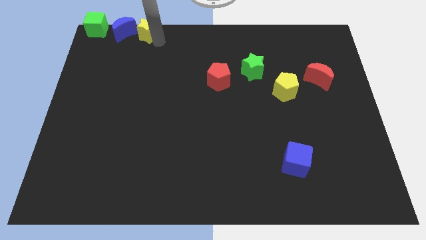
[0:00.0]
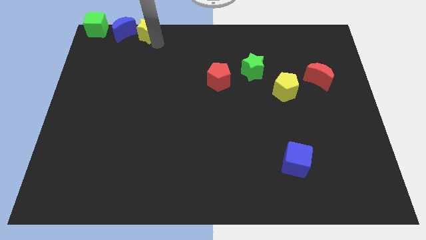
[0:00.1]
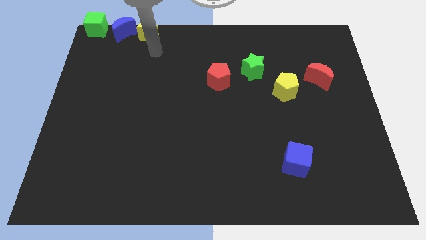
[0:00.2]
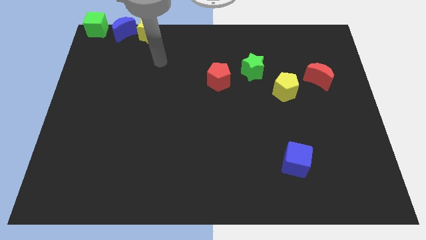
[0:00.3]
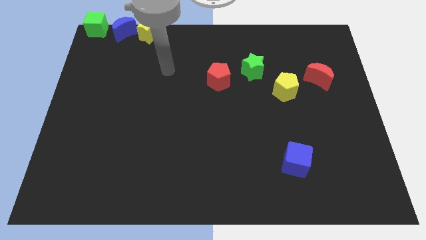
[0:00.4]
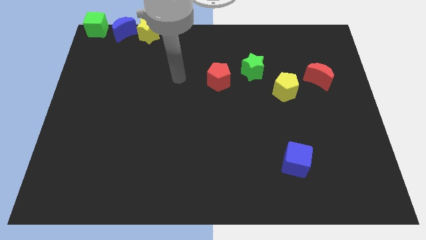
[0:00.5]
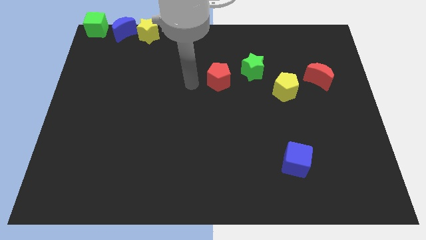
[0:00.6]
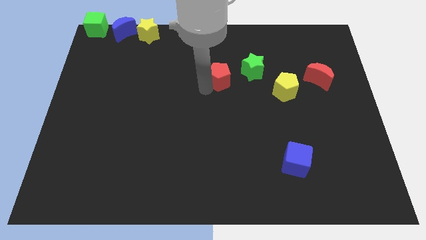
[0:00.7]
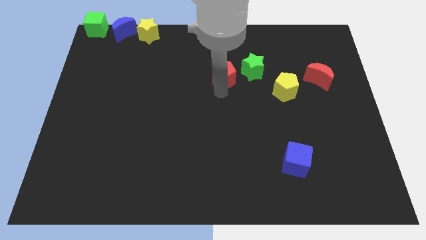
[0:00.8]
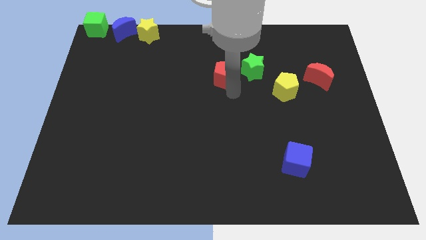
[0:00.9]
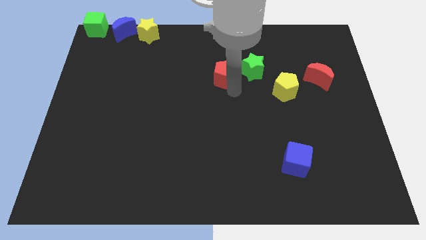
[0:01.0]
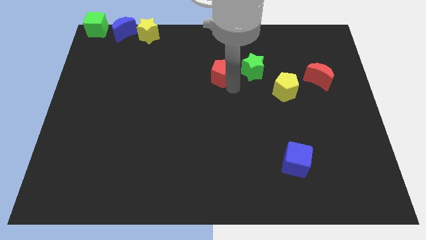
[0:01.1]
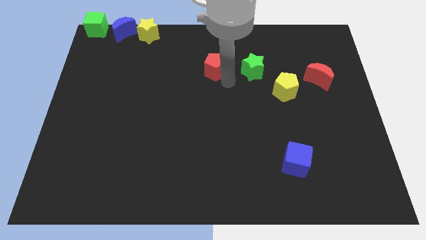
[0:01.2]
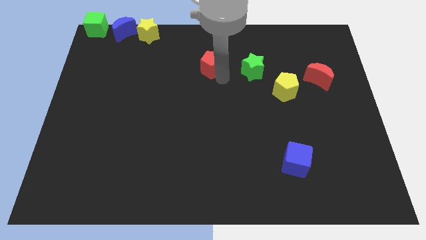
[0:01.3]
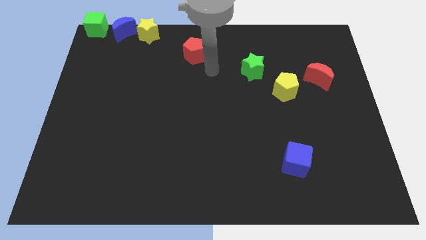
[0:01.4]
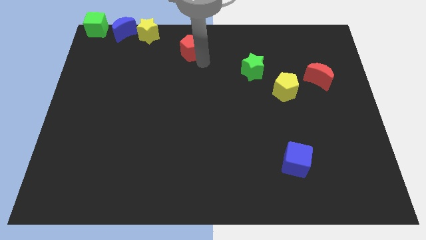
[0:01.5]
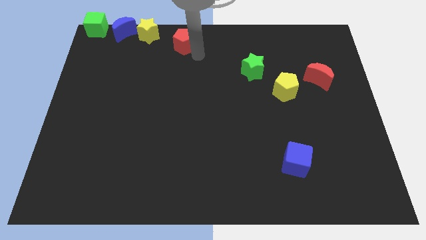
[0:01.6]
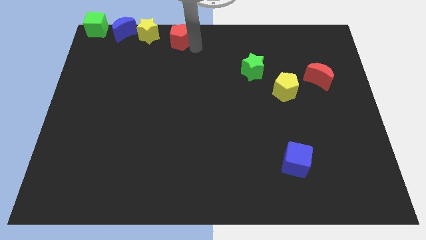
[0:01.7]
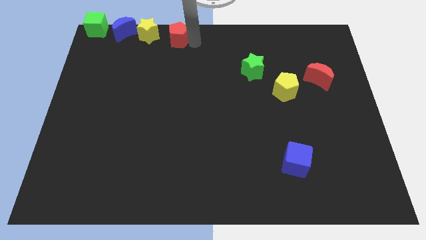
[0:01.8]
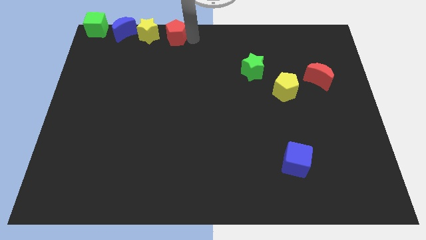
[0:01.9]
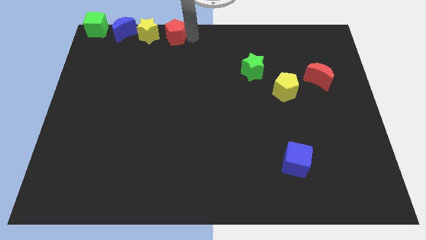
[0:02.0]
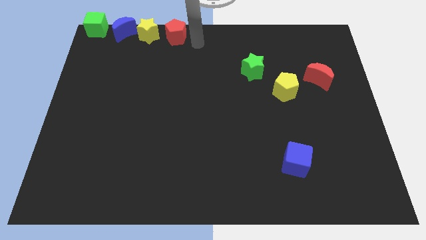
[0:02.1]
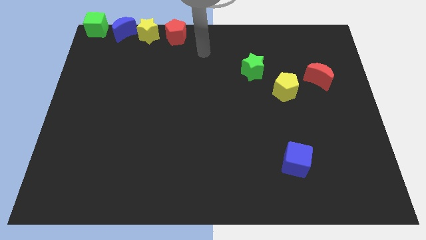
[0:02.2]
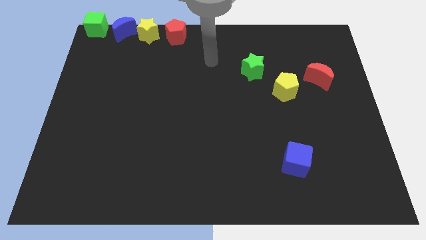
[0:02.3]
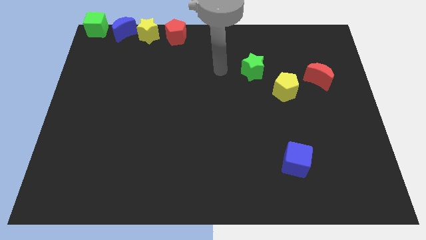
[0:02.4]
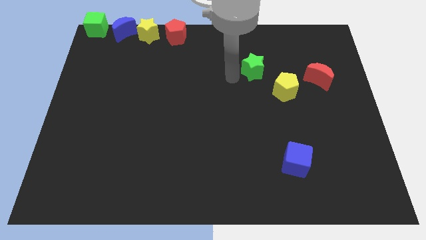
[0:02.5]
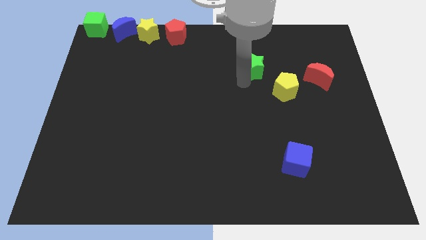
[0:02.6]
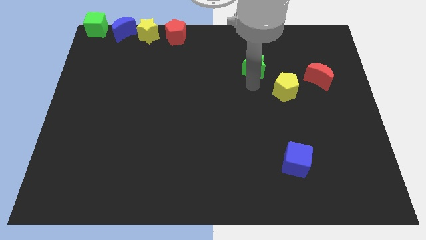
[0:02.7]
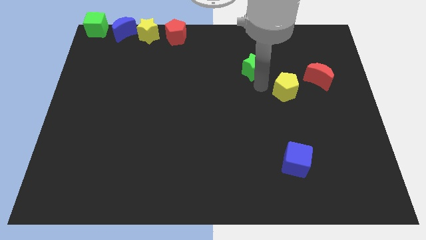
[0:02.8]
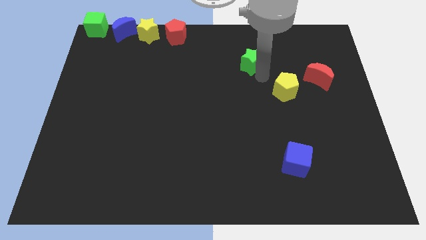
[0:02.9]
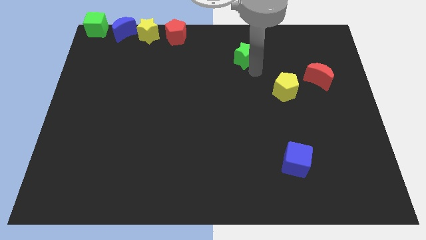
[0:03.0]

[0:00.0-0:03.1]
push the red pentagon to the right side of the yellow star

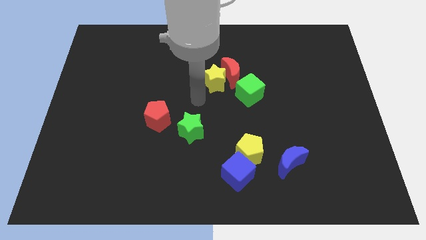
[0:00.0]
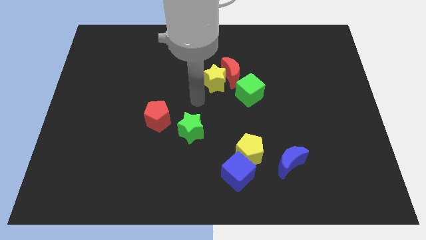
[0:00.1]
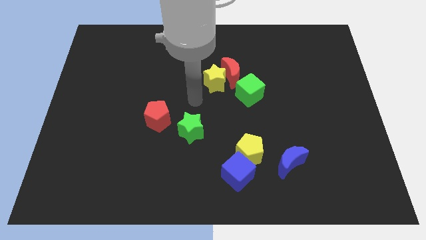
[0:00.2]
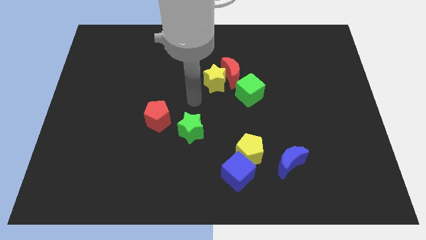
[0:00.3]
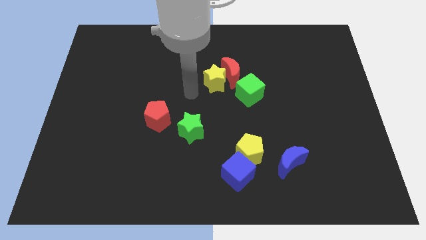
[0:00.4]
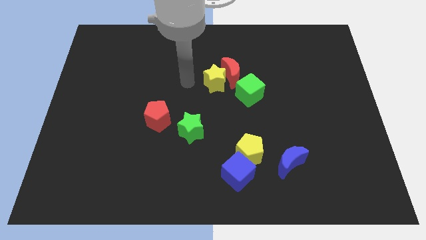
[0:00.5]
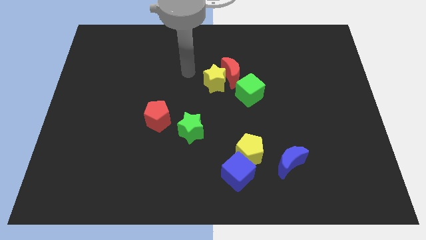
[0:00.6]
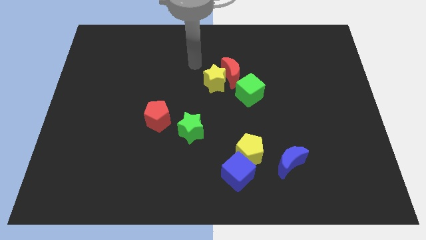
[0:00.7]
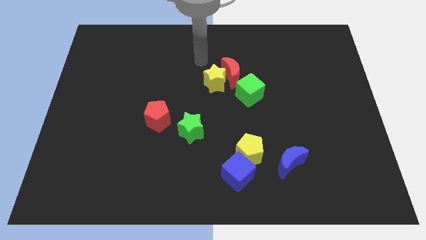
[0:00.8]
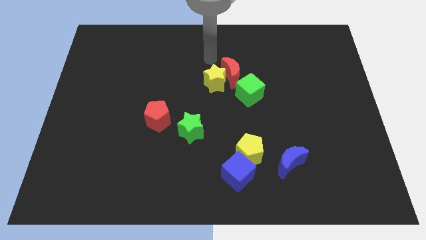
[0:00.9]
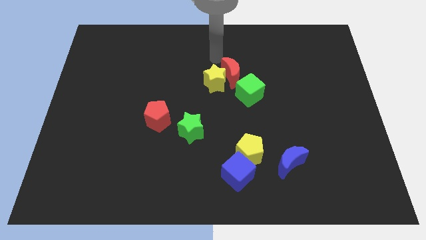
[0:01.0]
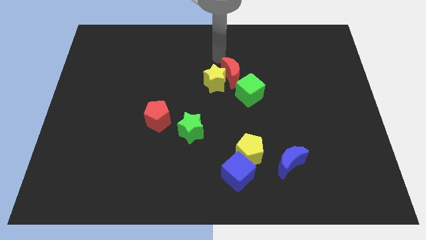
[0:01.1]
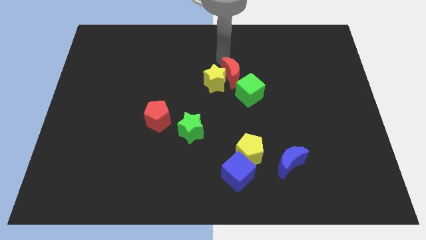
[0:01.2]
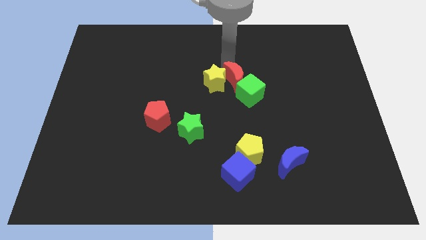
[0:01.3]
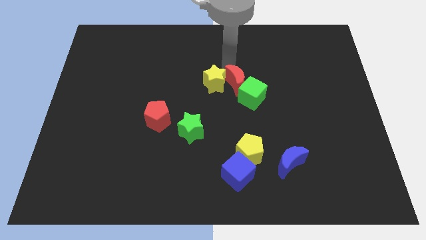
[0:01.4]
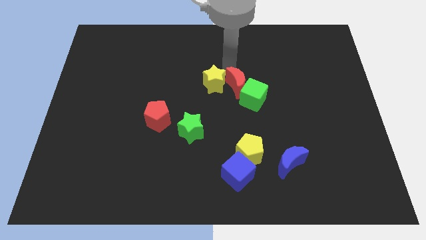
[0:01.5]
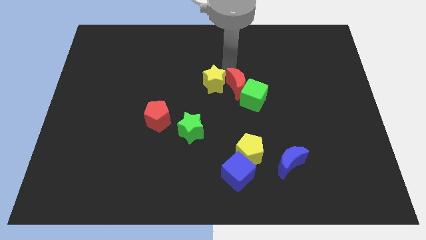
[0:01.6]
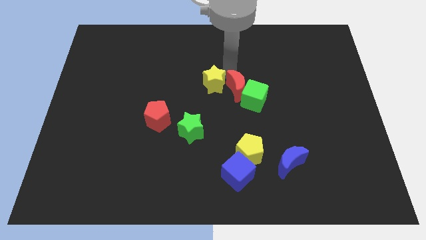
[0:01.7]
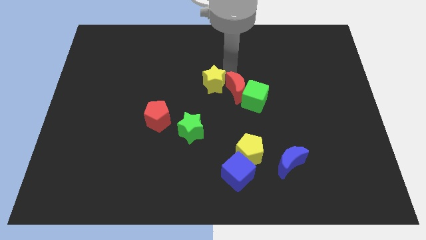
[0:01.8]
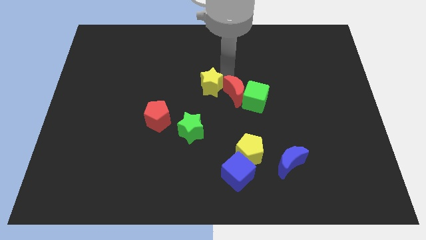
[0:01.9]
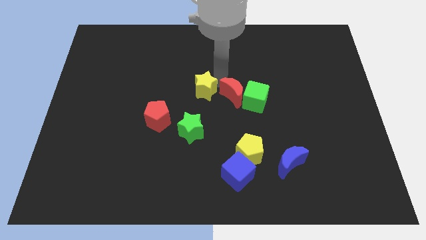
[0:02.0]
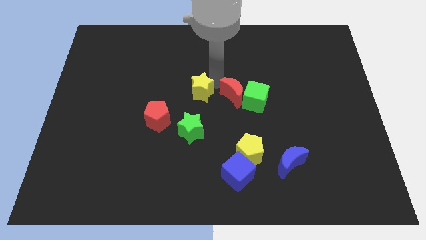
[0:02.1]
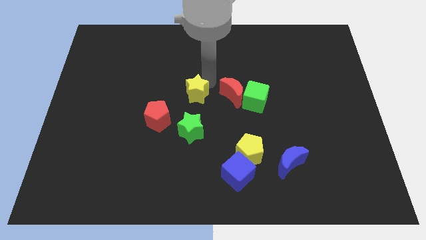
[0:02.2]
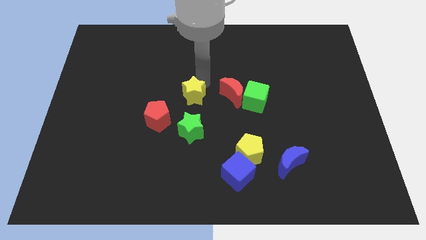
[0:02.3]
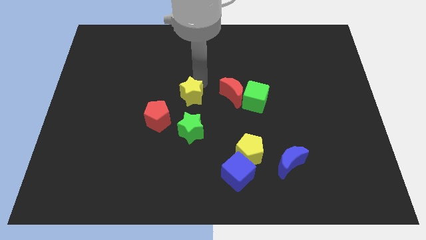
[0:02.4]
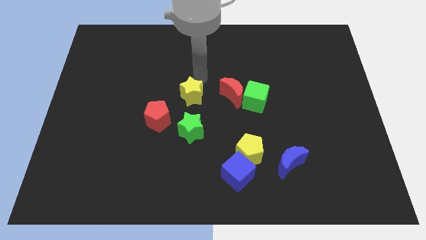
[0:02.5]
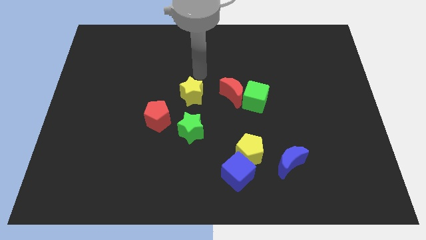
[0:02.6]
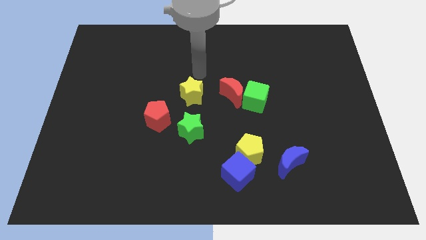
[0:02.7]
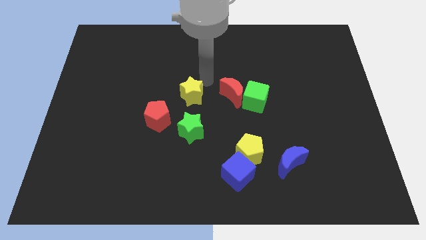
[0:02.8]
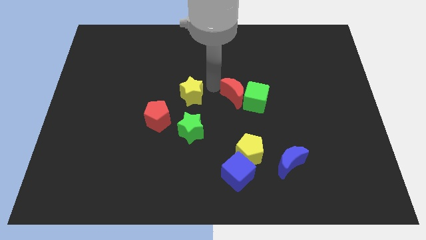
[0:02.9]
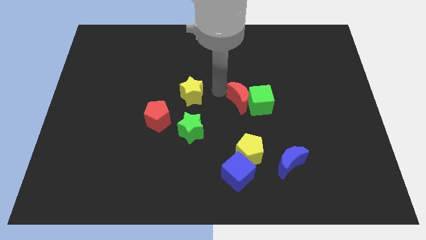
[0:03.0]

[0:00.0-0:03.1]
separate yellow star from the red moon

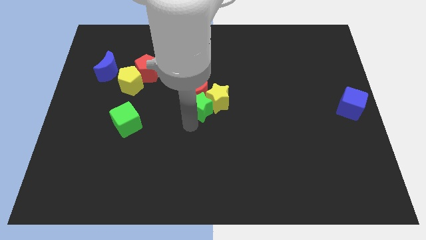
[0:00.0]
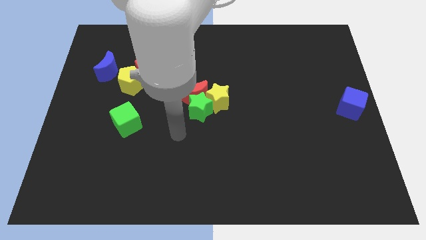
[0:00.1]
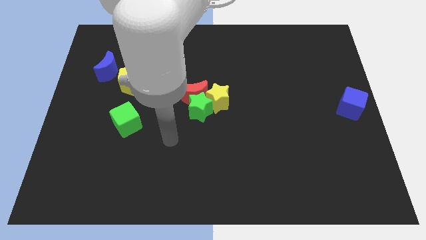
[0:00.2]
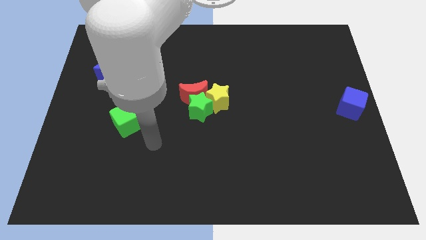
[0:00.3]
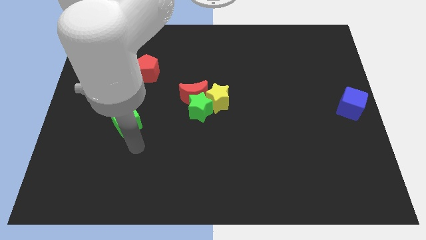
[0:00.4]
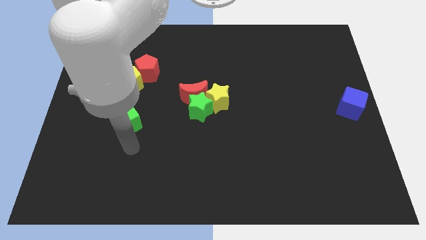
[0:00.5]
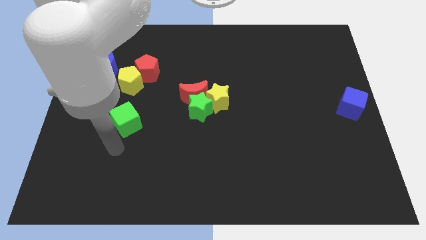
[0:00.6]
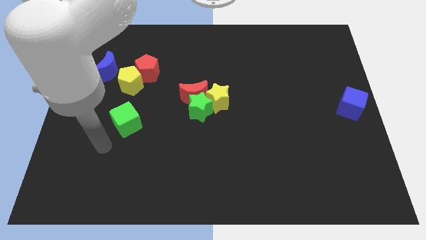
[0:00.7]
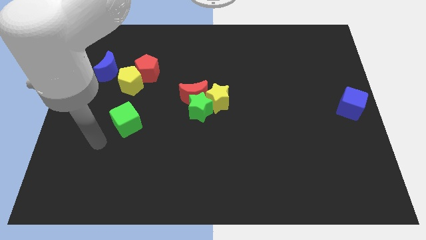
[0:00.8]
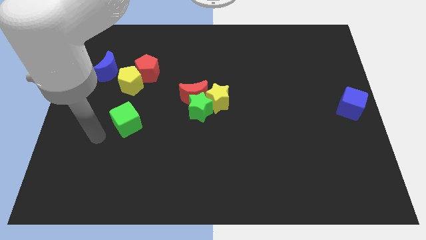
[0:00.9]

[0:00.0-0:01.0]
move your arm away from the green star

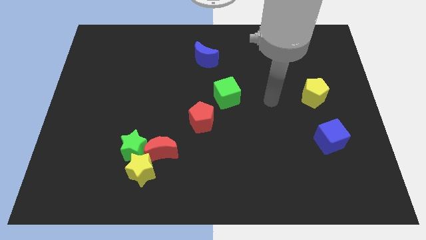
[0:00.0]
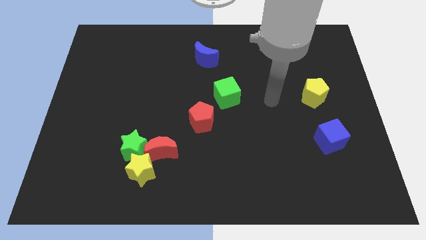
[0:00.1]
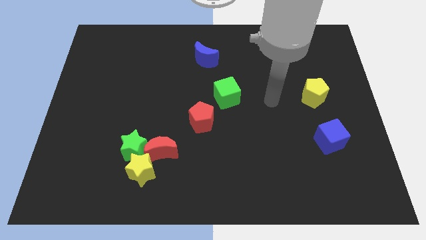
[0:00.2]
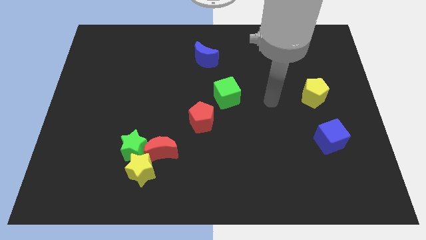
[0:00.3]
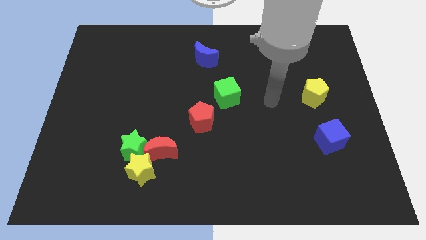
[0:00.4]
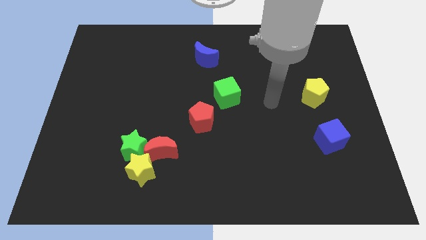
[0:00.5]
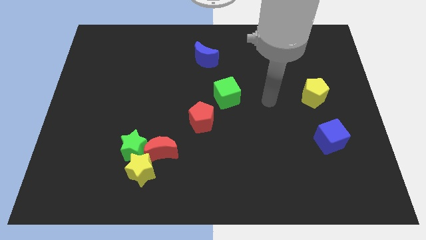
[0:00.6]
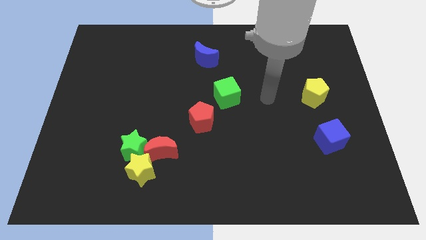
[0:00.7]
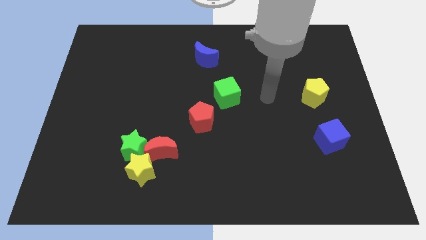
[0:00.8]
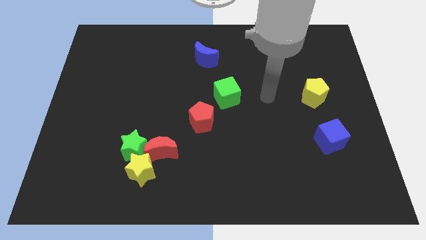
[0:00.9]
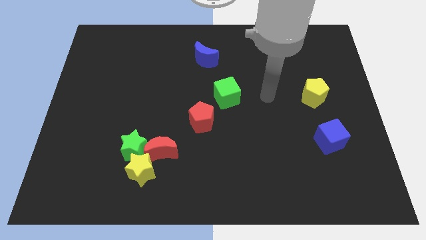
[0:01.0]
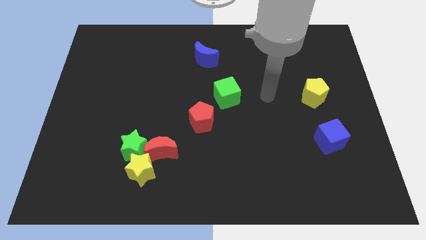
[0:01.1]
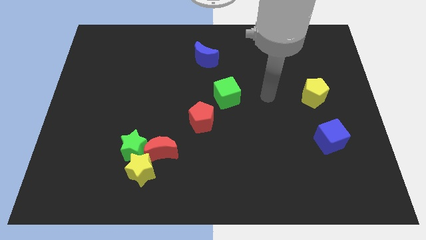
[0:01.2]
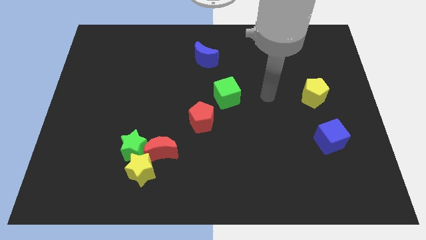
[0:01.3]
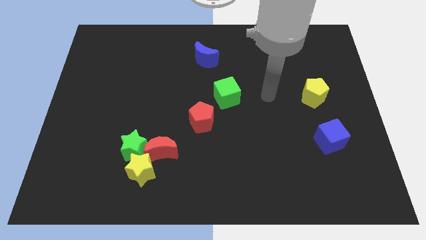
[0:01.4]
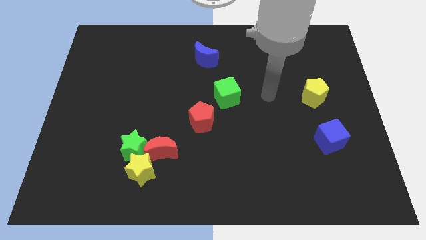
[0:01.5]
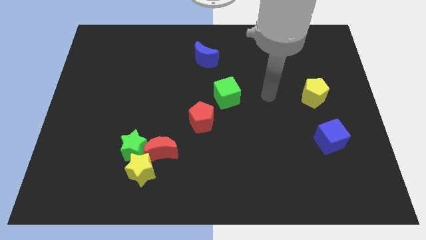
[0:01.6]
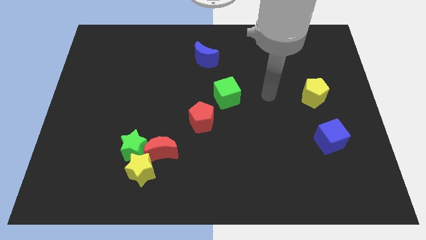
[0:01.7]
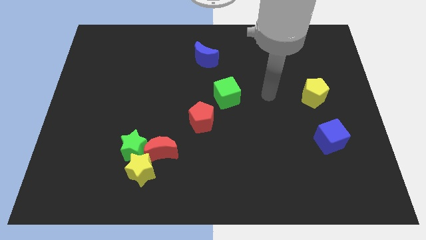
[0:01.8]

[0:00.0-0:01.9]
move your arm between yellow pentagon and green cube
